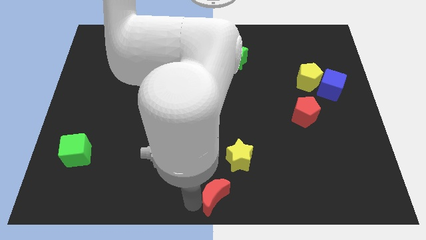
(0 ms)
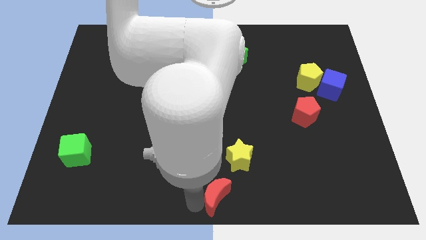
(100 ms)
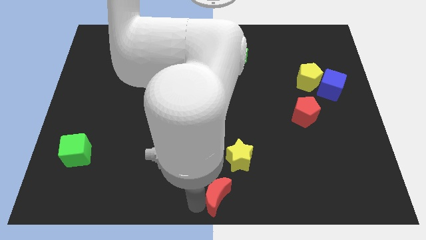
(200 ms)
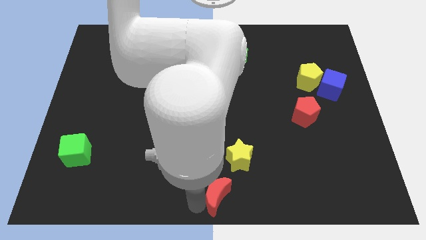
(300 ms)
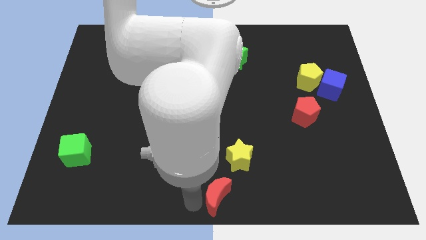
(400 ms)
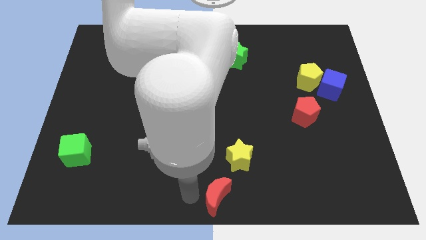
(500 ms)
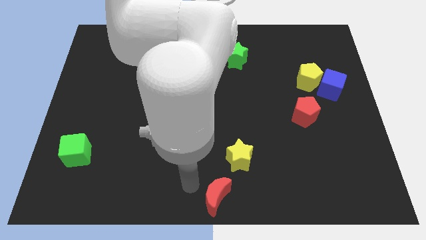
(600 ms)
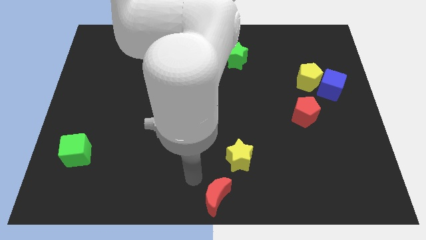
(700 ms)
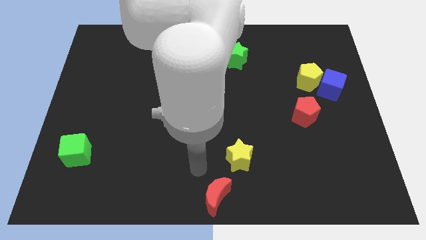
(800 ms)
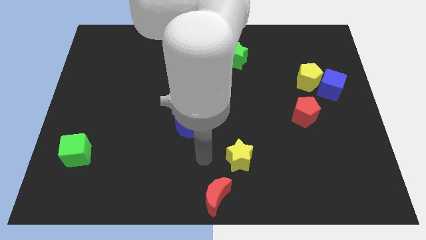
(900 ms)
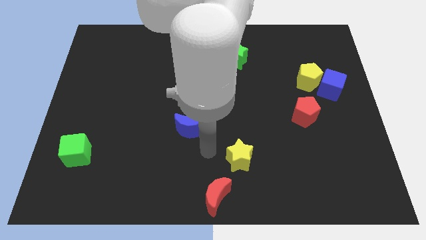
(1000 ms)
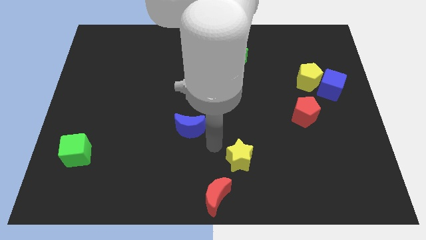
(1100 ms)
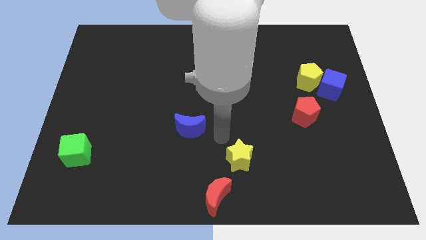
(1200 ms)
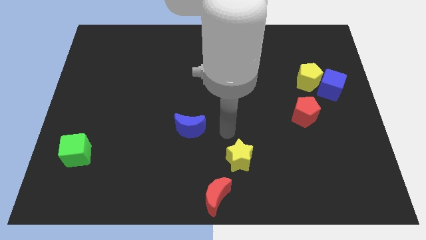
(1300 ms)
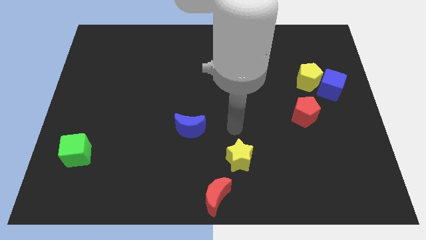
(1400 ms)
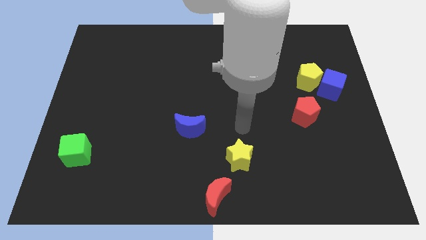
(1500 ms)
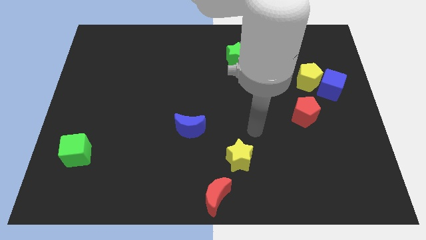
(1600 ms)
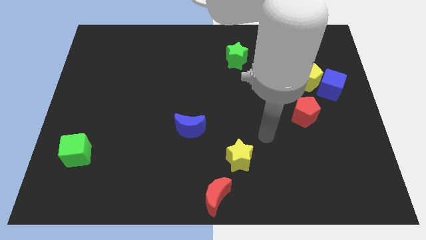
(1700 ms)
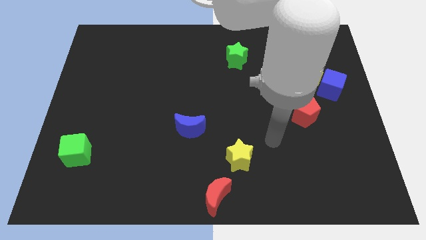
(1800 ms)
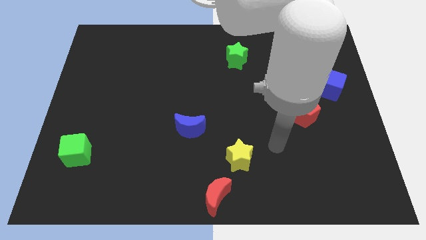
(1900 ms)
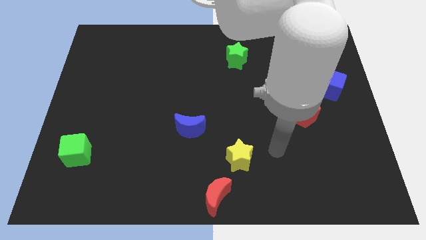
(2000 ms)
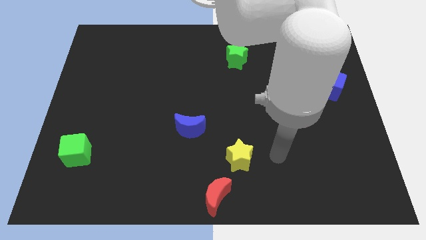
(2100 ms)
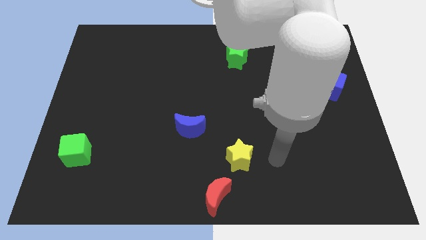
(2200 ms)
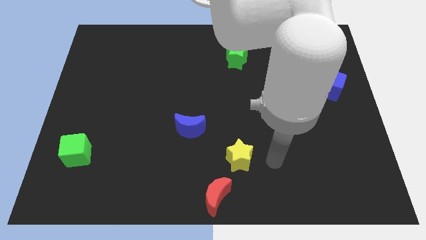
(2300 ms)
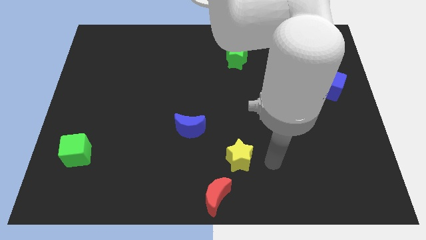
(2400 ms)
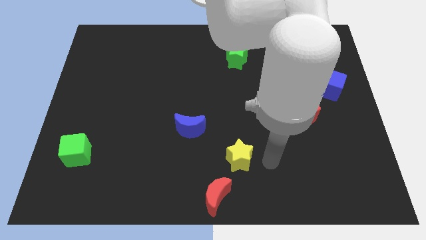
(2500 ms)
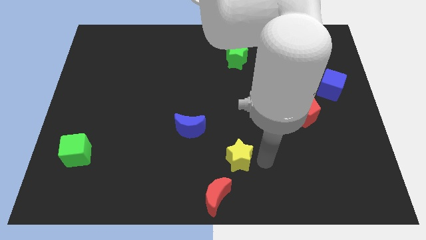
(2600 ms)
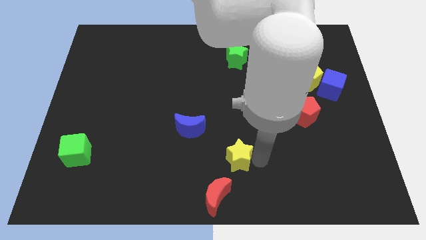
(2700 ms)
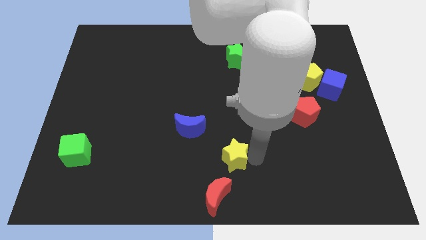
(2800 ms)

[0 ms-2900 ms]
point your arm right to the yellow star

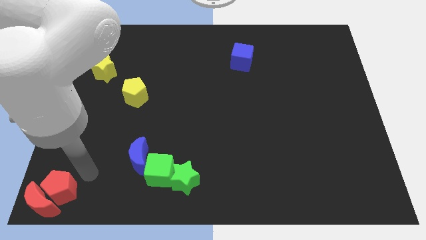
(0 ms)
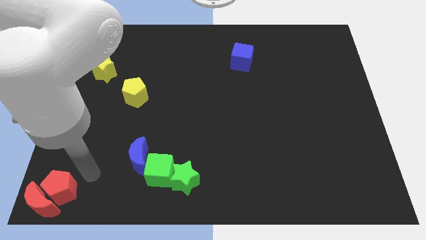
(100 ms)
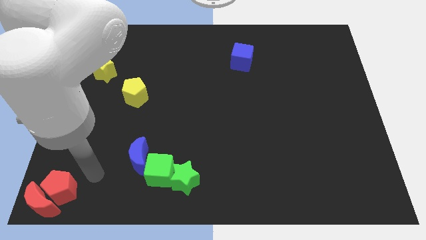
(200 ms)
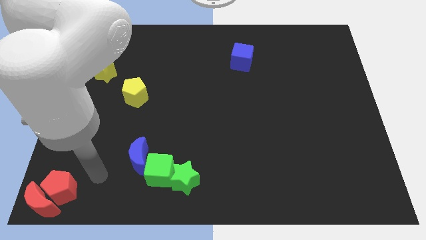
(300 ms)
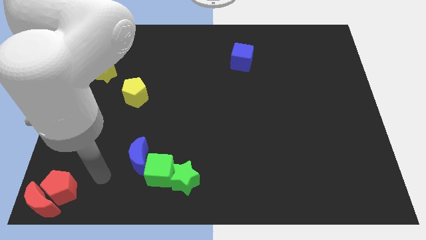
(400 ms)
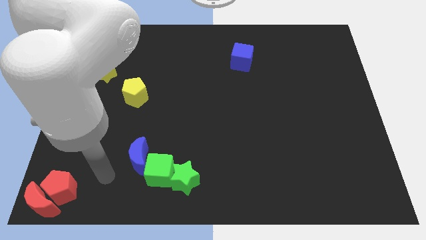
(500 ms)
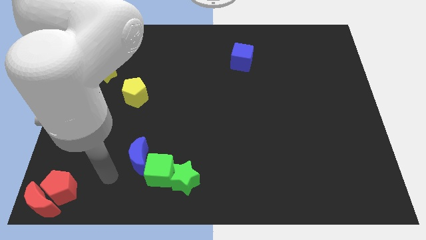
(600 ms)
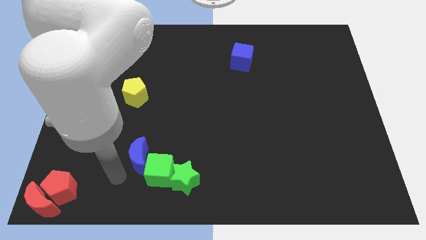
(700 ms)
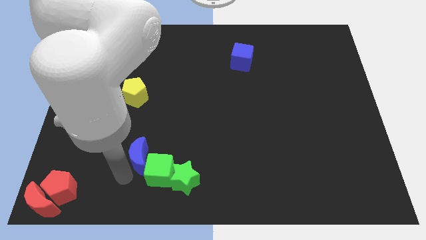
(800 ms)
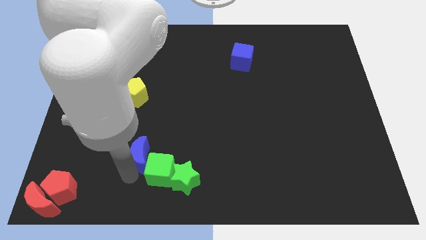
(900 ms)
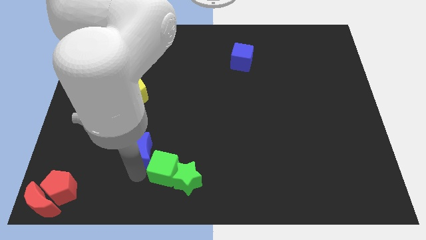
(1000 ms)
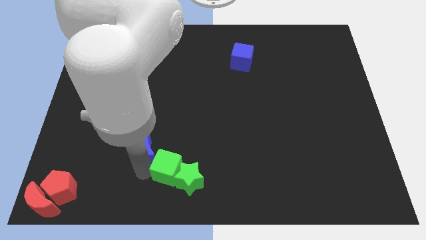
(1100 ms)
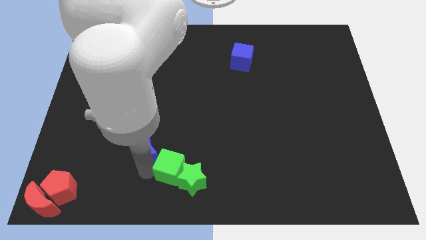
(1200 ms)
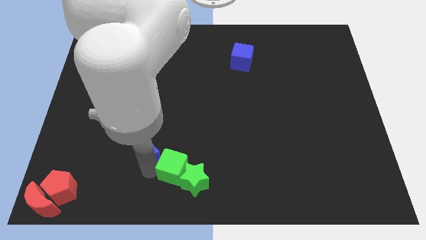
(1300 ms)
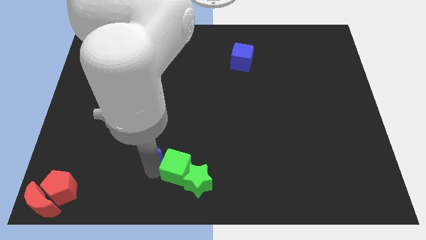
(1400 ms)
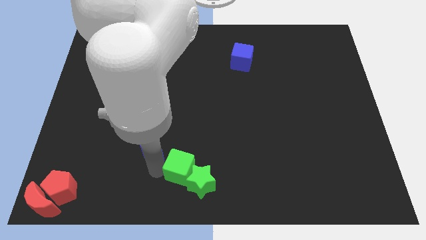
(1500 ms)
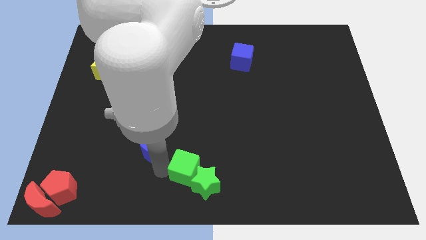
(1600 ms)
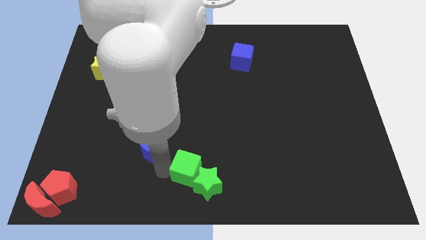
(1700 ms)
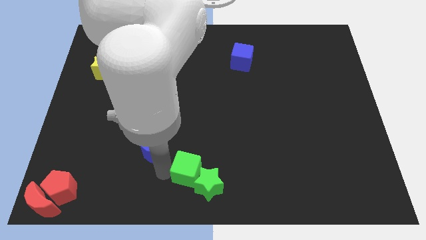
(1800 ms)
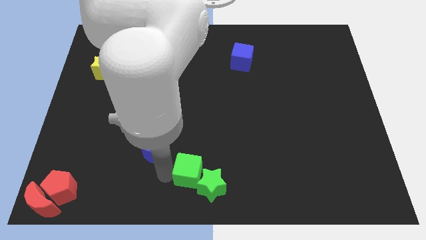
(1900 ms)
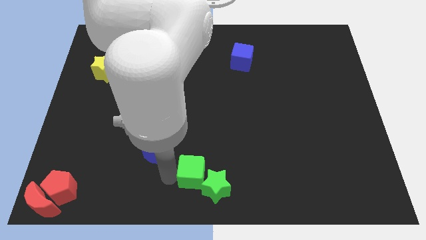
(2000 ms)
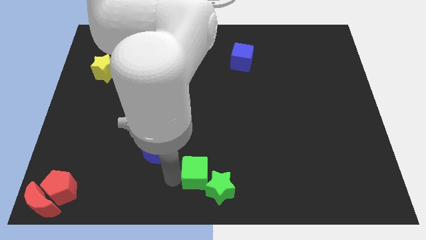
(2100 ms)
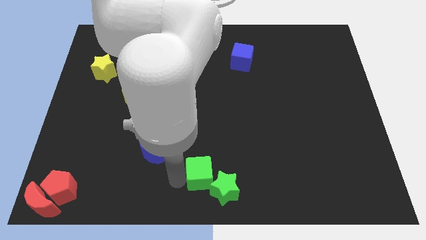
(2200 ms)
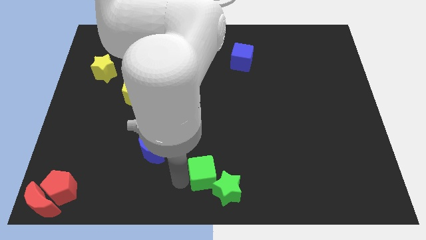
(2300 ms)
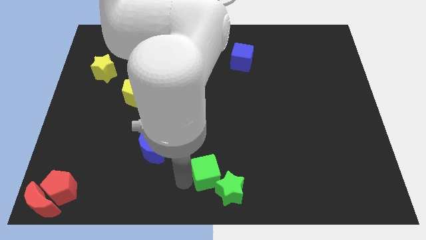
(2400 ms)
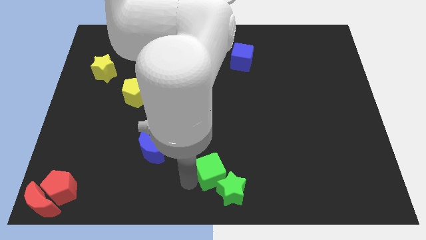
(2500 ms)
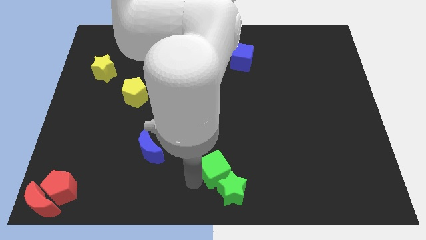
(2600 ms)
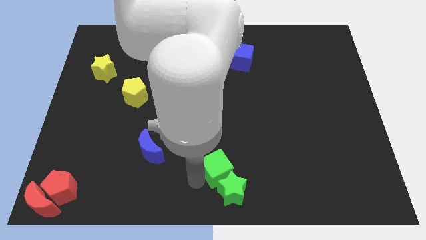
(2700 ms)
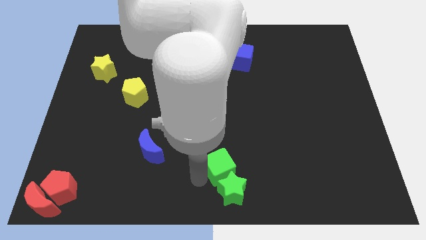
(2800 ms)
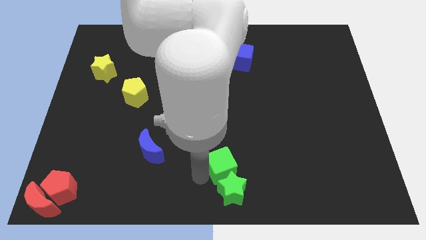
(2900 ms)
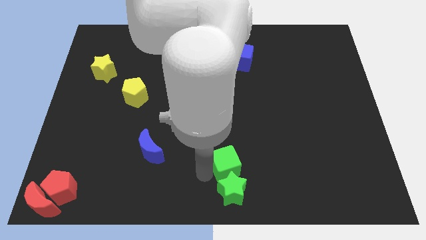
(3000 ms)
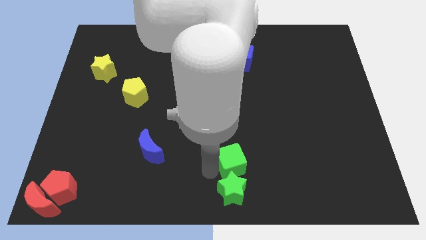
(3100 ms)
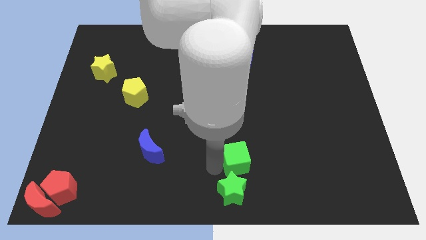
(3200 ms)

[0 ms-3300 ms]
place the green blocks to the bottom center of the board

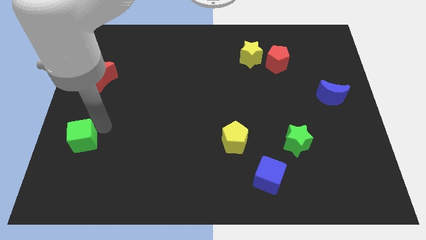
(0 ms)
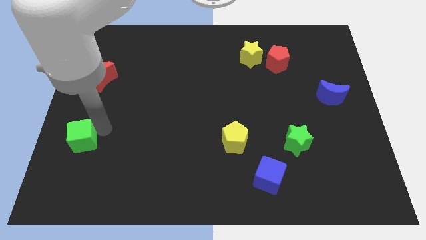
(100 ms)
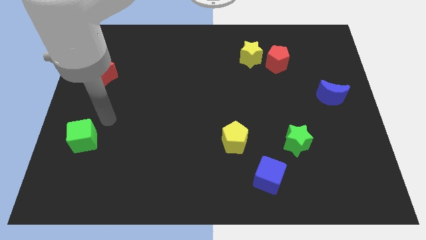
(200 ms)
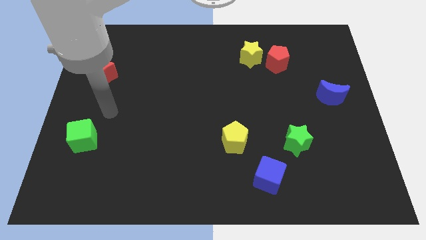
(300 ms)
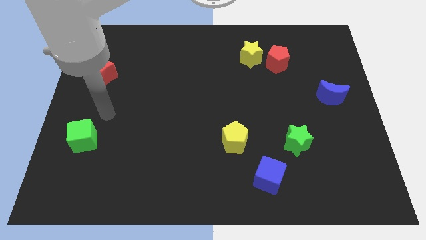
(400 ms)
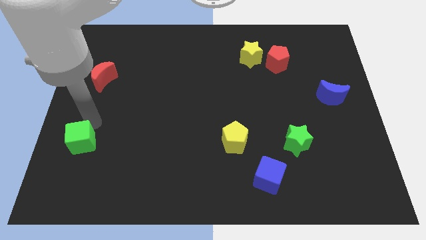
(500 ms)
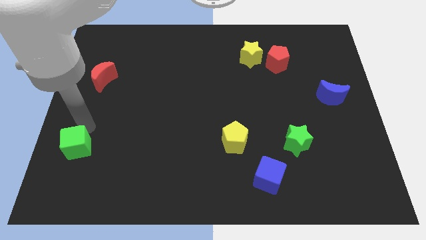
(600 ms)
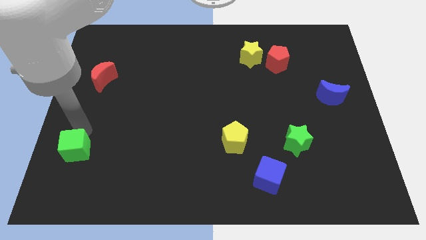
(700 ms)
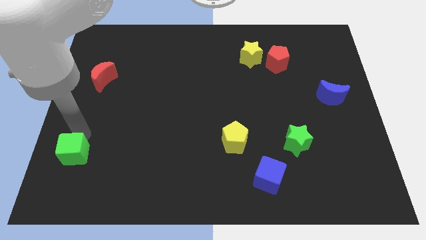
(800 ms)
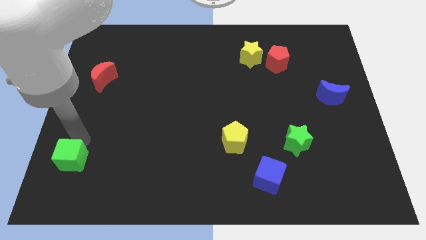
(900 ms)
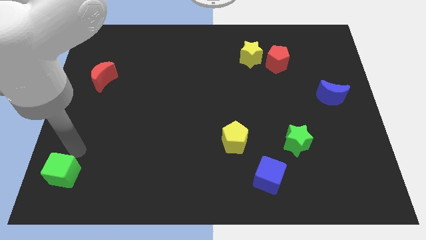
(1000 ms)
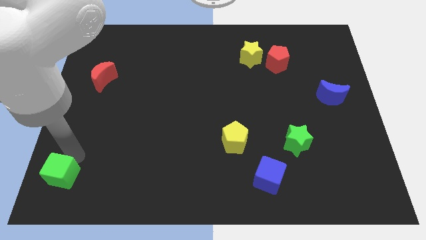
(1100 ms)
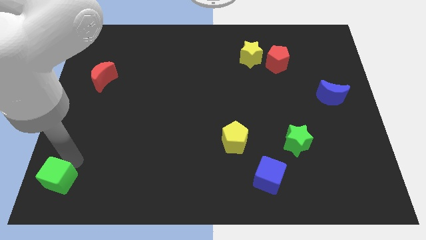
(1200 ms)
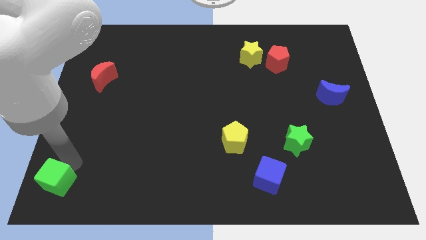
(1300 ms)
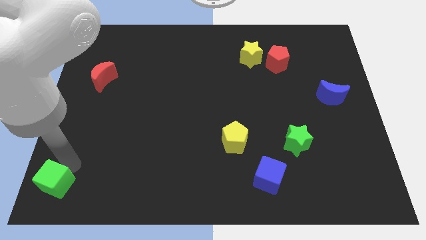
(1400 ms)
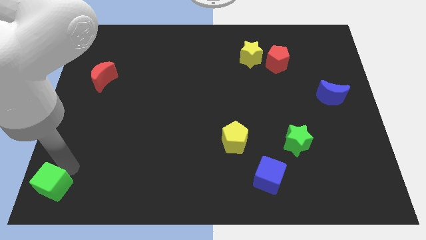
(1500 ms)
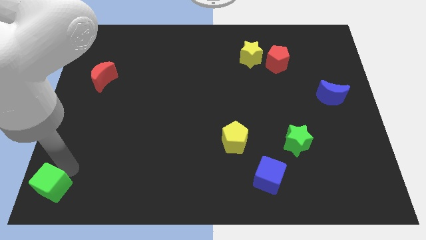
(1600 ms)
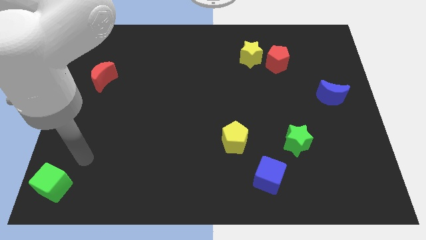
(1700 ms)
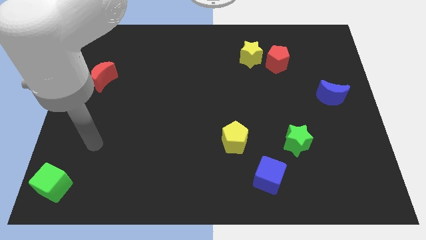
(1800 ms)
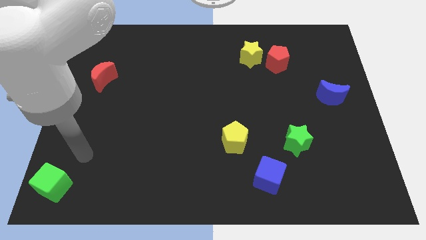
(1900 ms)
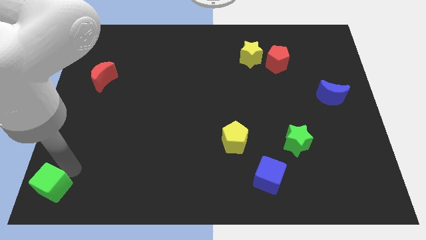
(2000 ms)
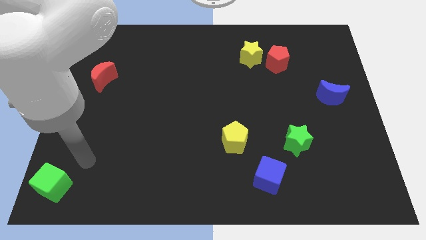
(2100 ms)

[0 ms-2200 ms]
move the green cube to the bottom left

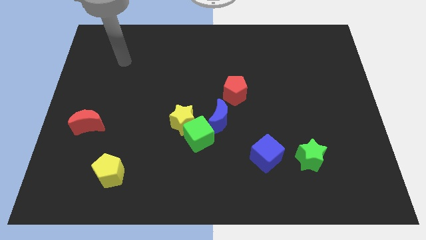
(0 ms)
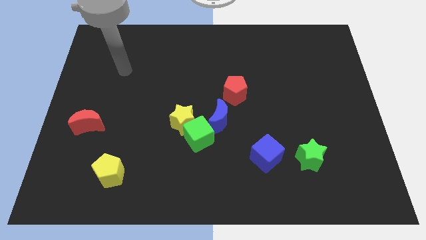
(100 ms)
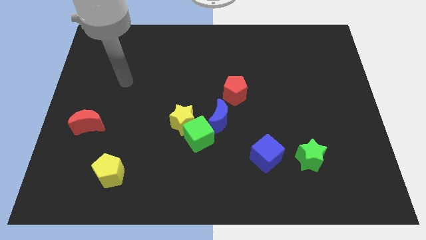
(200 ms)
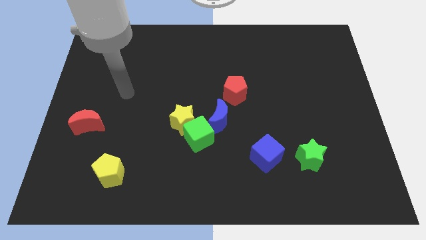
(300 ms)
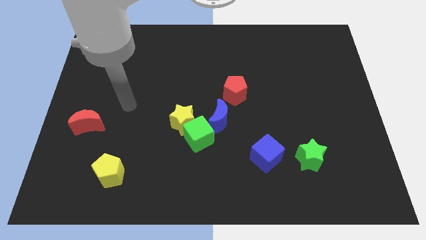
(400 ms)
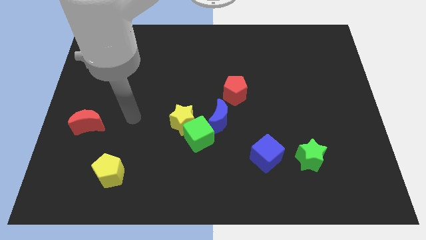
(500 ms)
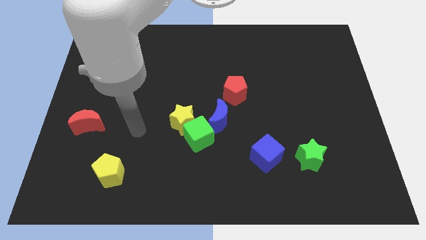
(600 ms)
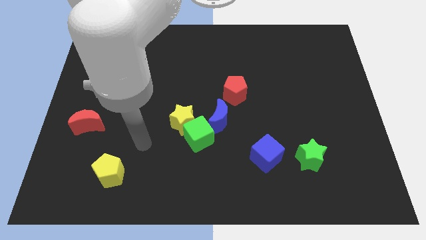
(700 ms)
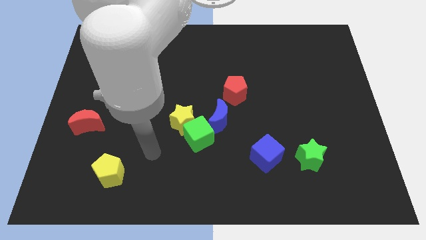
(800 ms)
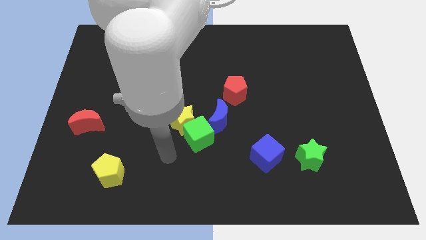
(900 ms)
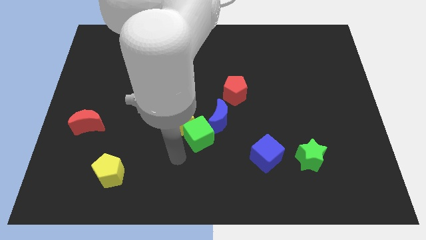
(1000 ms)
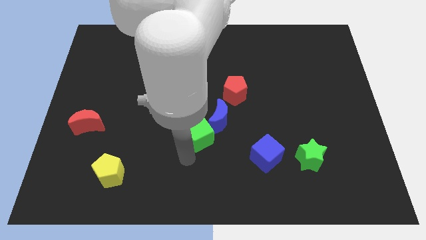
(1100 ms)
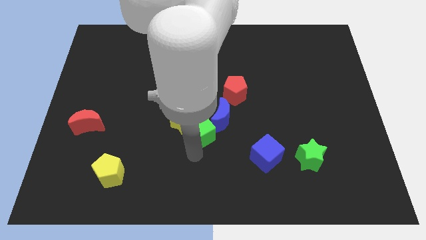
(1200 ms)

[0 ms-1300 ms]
tap on the bottom side of the green cube
